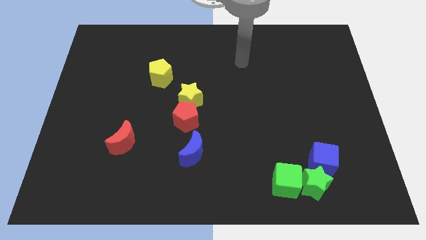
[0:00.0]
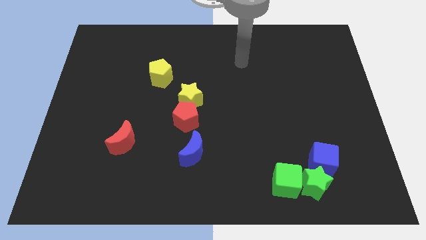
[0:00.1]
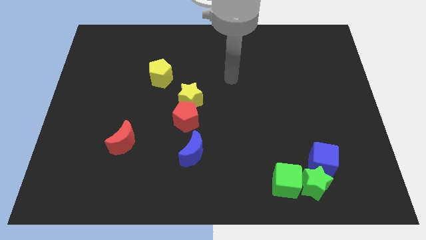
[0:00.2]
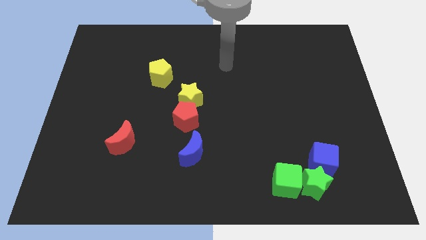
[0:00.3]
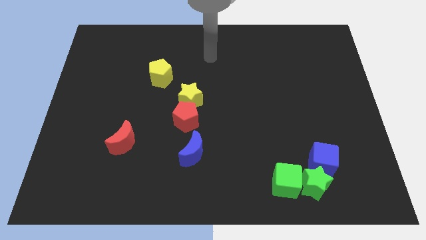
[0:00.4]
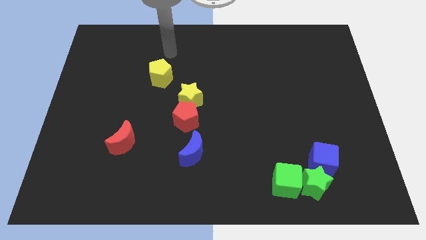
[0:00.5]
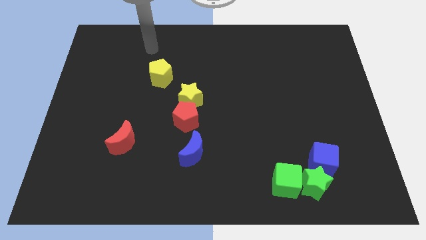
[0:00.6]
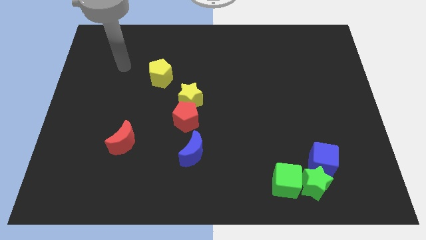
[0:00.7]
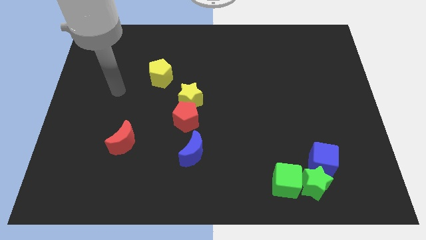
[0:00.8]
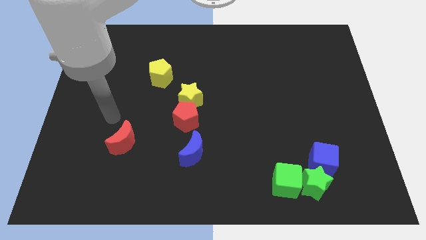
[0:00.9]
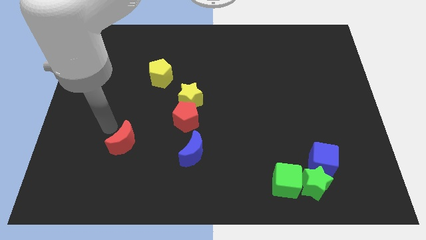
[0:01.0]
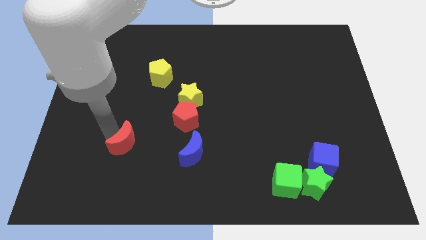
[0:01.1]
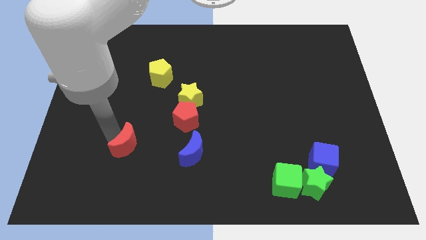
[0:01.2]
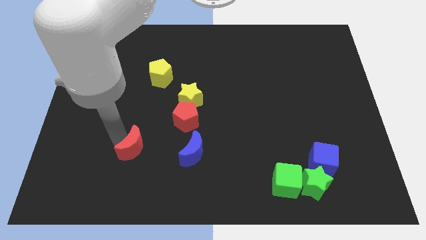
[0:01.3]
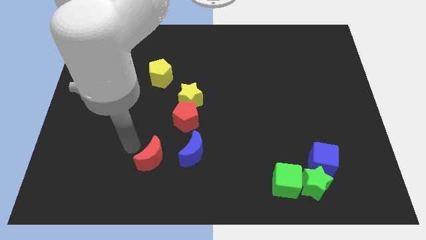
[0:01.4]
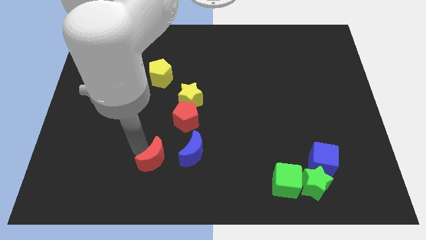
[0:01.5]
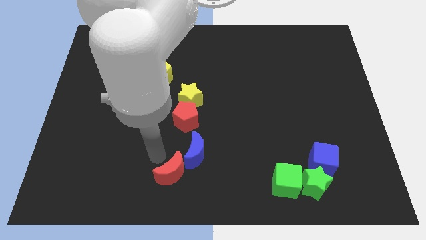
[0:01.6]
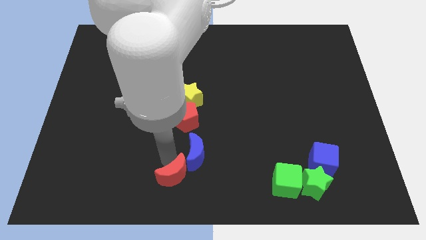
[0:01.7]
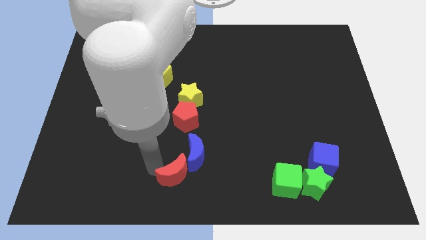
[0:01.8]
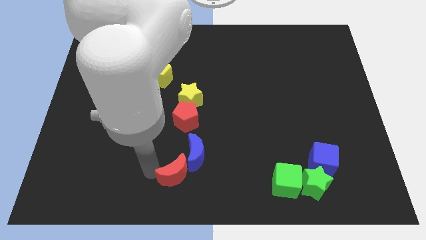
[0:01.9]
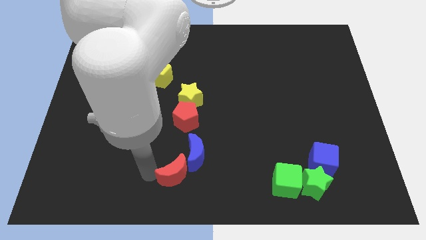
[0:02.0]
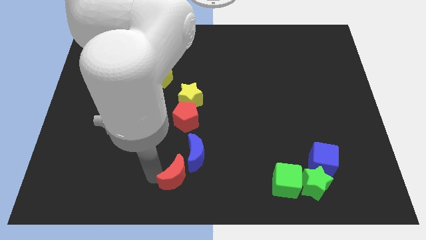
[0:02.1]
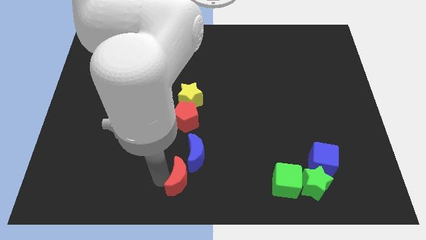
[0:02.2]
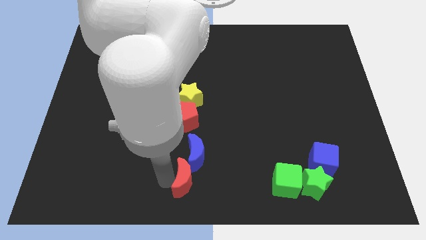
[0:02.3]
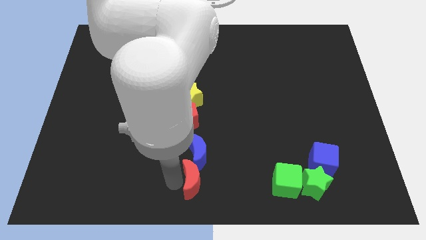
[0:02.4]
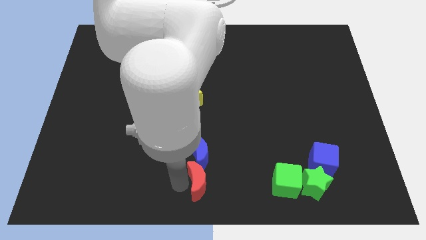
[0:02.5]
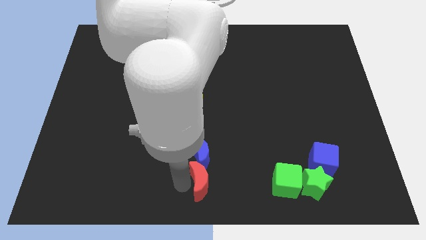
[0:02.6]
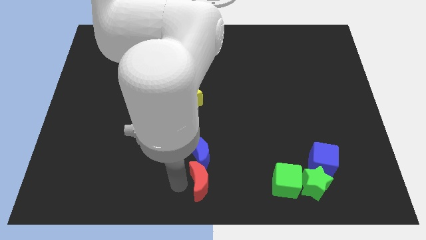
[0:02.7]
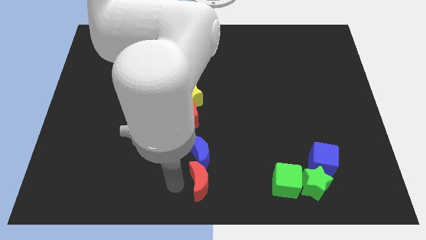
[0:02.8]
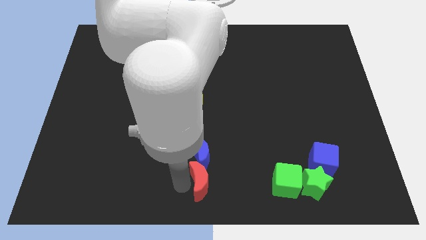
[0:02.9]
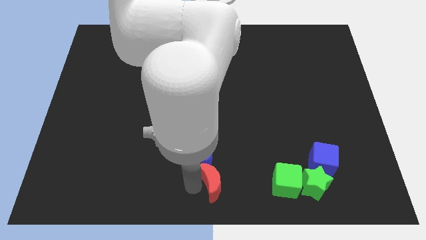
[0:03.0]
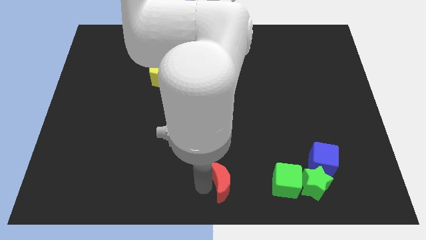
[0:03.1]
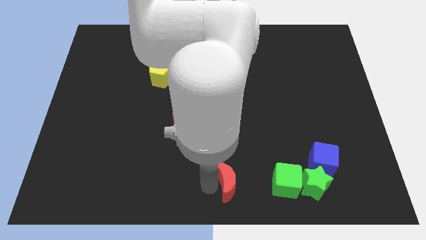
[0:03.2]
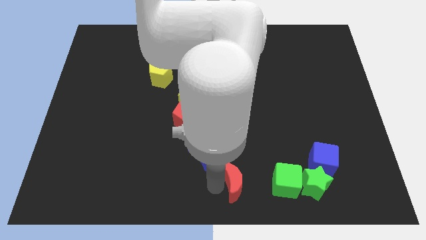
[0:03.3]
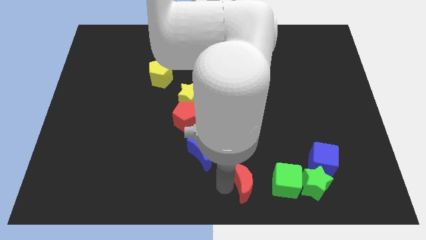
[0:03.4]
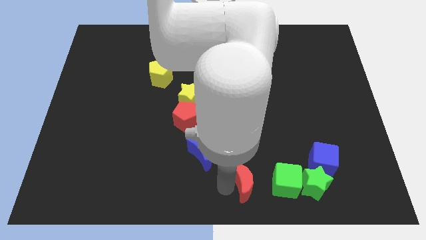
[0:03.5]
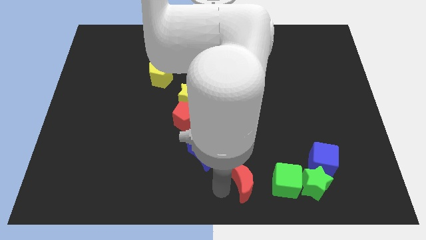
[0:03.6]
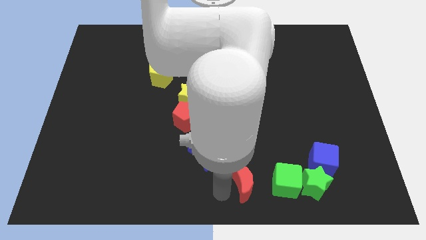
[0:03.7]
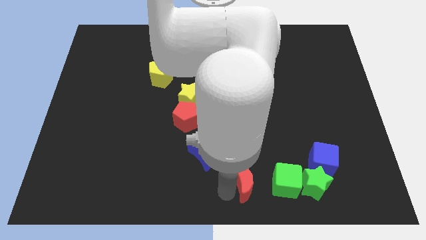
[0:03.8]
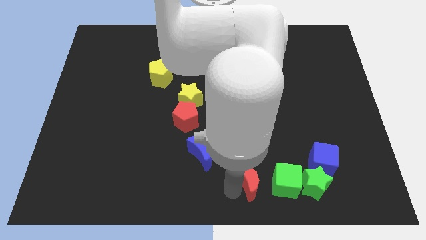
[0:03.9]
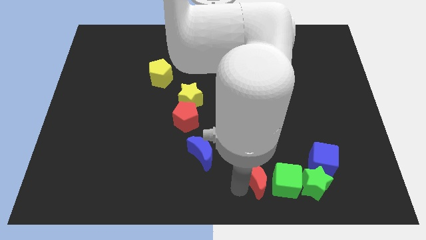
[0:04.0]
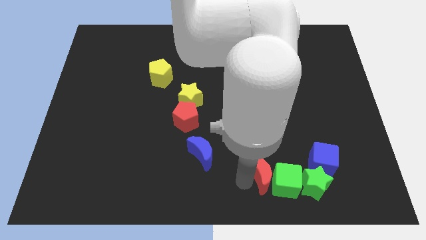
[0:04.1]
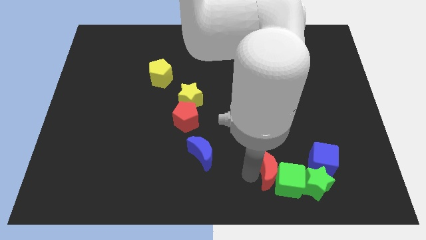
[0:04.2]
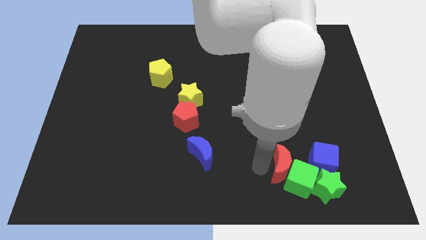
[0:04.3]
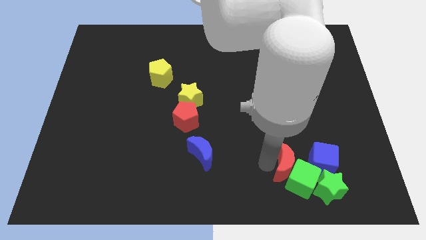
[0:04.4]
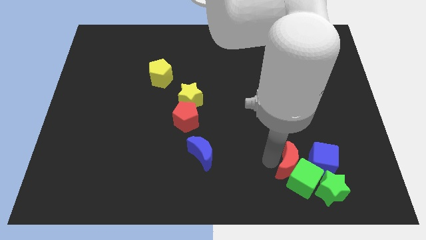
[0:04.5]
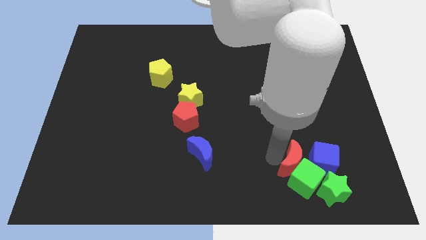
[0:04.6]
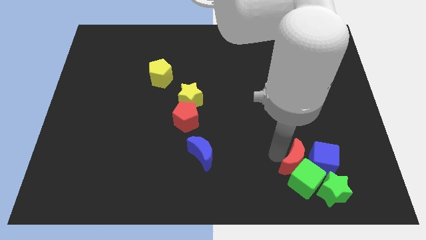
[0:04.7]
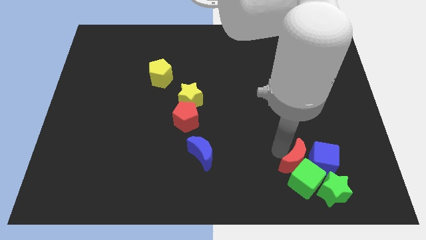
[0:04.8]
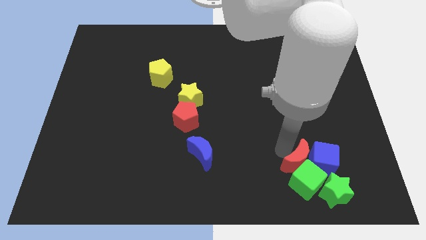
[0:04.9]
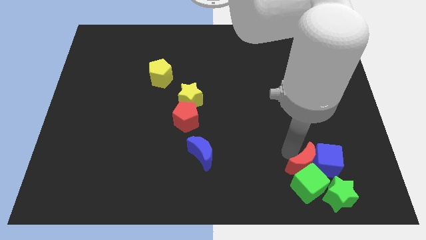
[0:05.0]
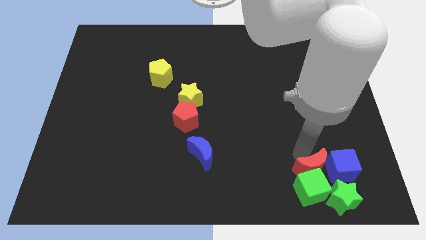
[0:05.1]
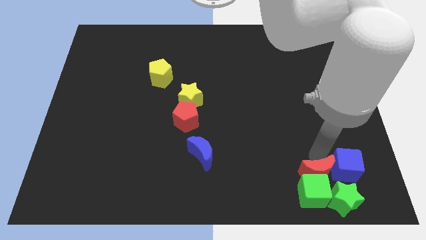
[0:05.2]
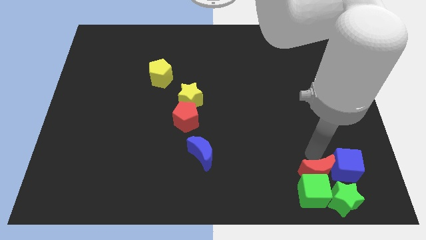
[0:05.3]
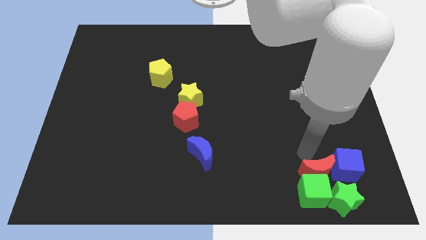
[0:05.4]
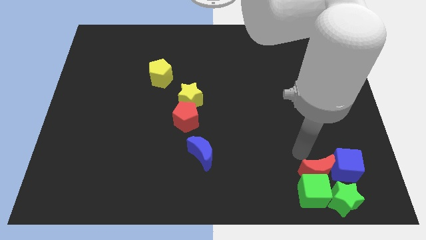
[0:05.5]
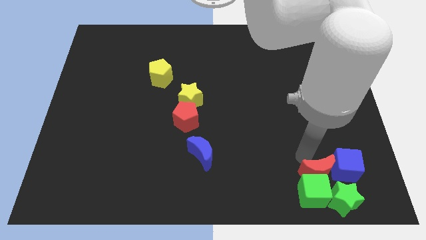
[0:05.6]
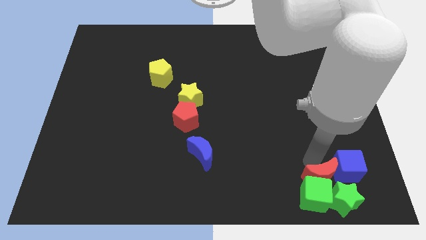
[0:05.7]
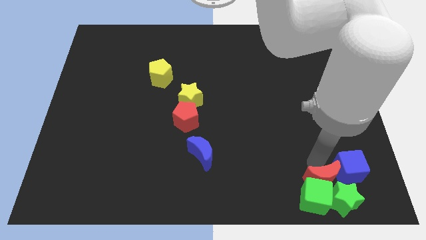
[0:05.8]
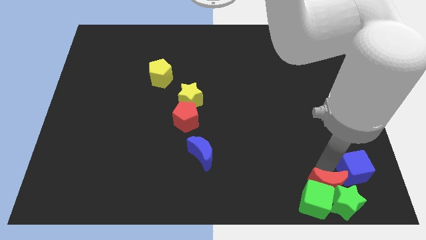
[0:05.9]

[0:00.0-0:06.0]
move the red moon towards the green star

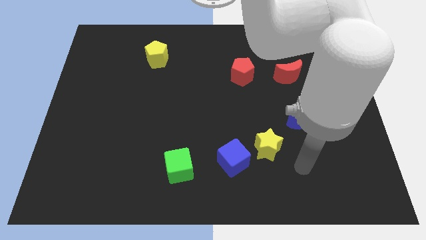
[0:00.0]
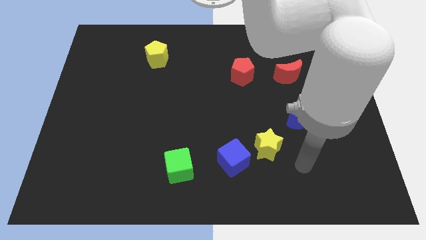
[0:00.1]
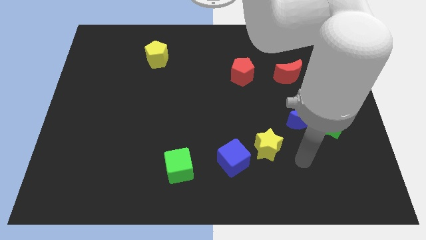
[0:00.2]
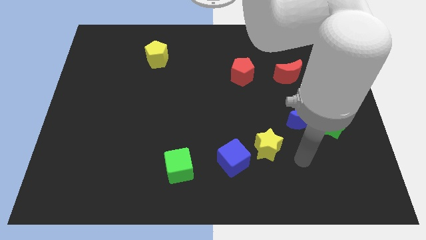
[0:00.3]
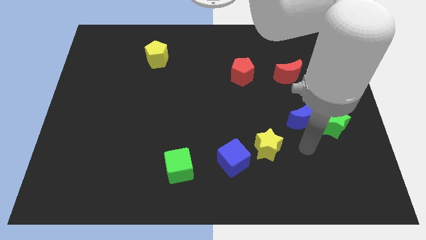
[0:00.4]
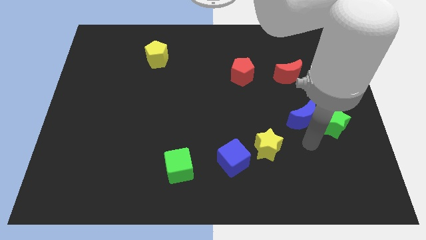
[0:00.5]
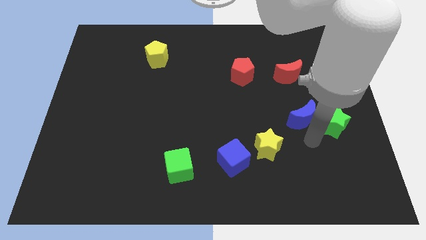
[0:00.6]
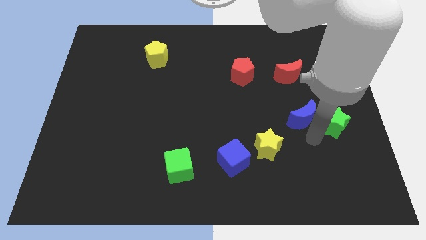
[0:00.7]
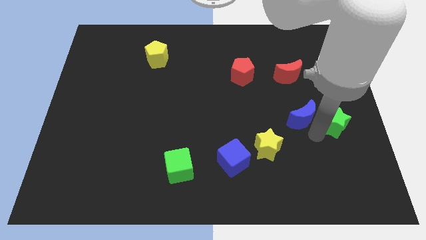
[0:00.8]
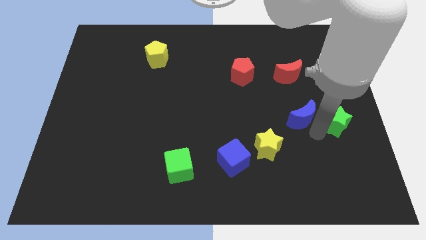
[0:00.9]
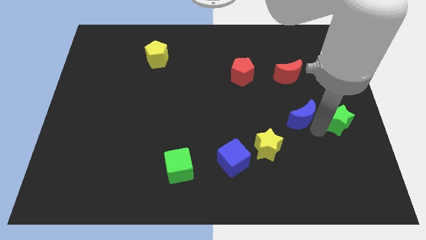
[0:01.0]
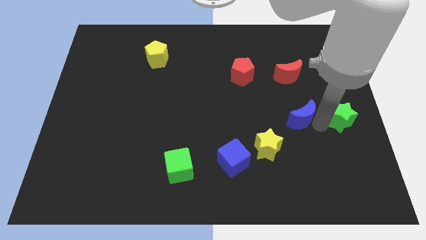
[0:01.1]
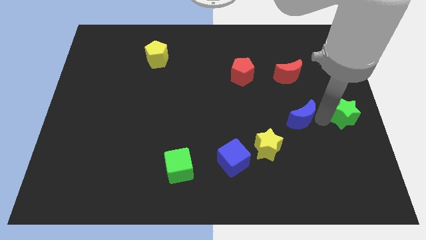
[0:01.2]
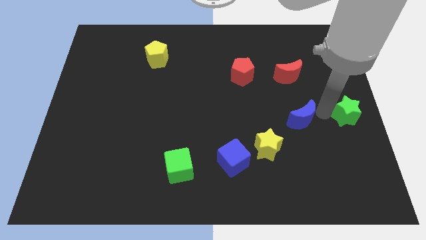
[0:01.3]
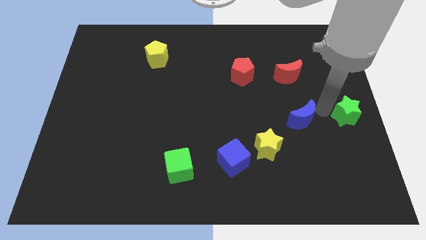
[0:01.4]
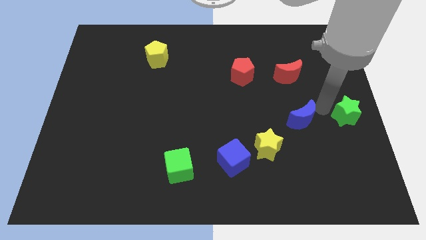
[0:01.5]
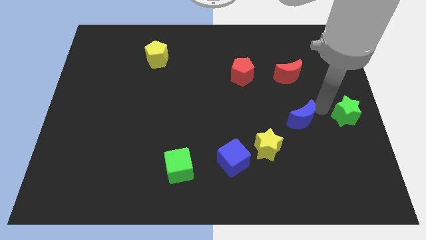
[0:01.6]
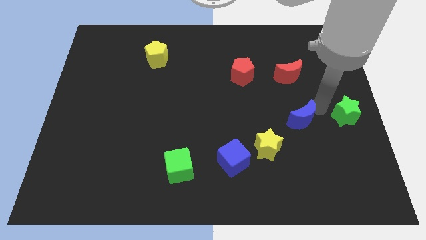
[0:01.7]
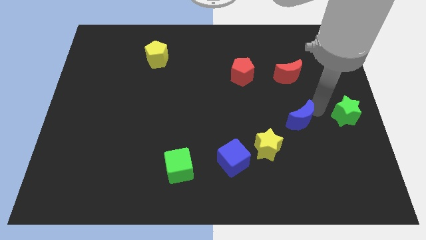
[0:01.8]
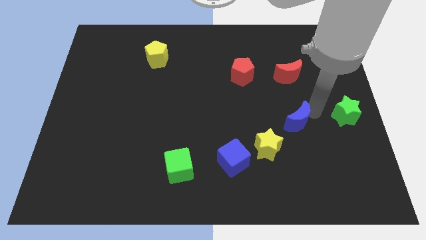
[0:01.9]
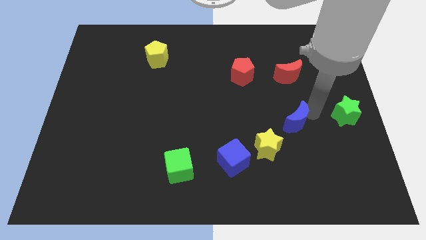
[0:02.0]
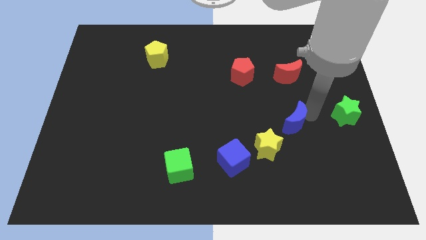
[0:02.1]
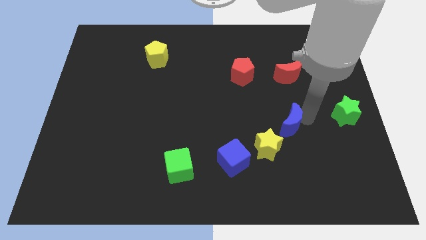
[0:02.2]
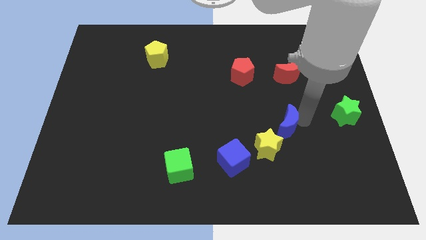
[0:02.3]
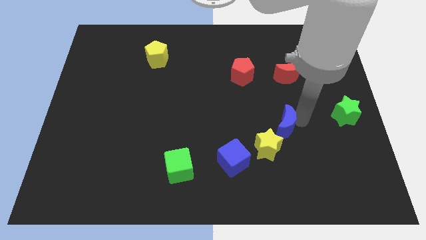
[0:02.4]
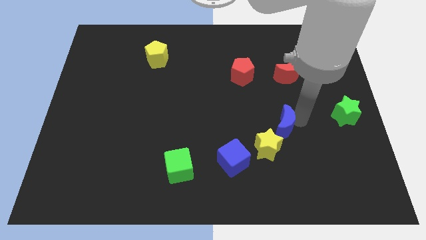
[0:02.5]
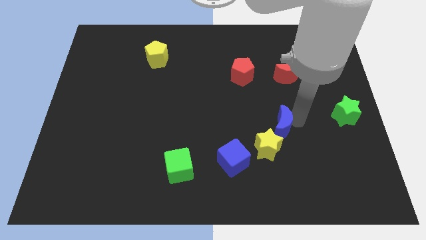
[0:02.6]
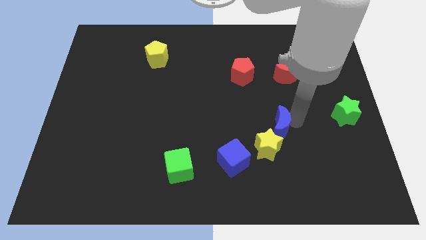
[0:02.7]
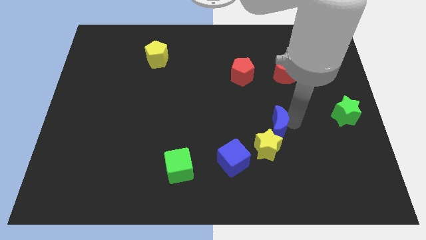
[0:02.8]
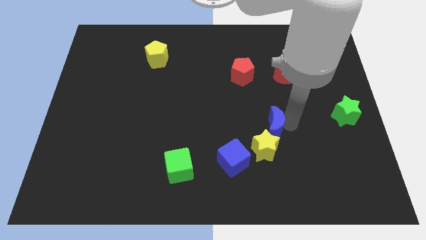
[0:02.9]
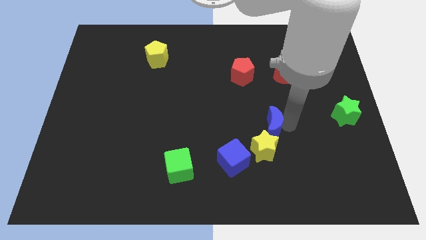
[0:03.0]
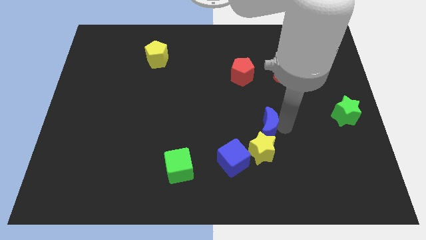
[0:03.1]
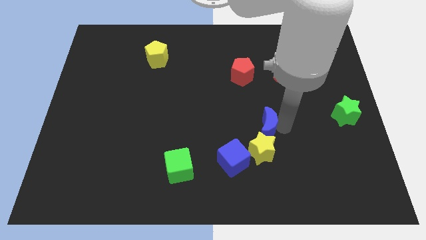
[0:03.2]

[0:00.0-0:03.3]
put the blue moon towards the yellow star
